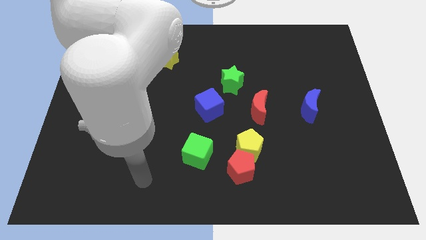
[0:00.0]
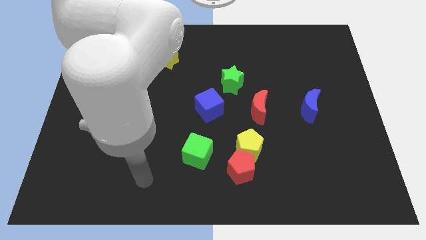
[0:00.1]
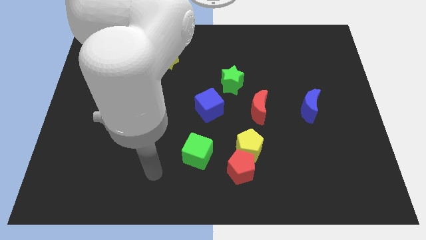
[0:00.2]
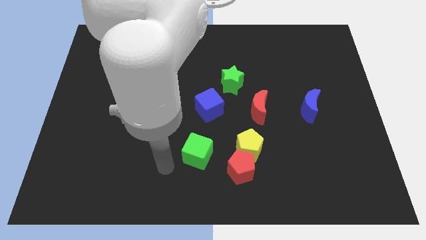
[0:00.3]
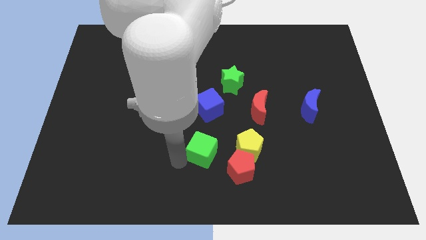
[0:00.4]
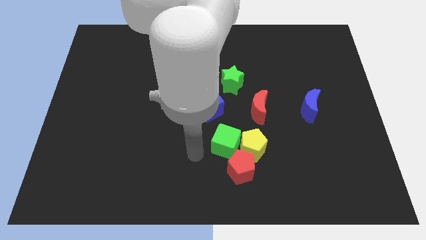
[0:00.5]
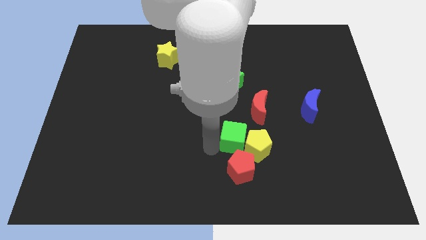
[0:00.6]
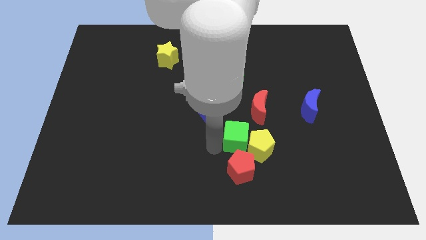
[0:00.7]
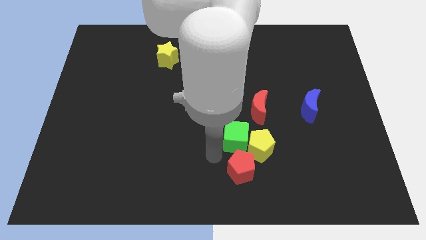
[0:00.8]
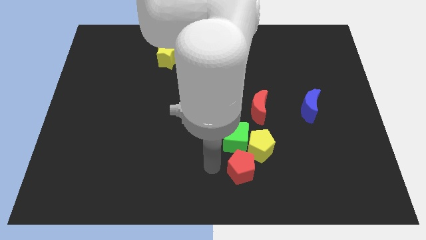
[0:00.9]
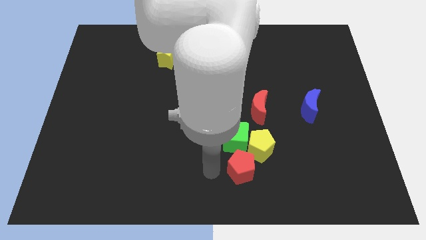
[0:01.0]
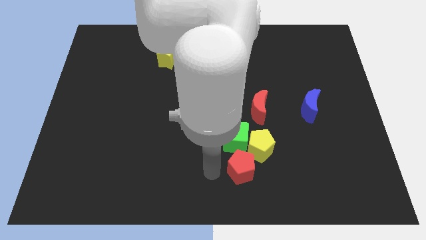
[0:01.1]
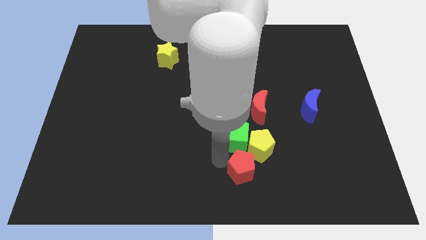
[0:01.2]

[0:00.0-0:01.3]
push the green cube into the yellow pentagon

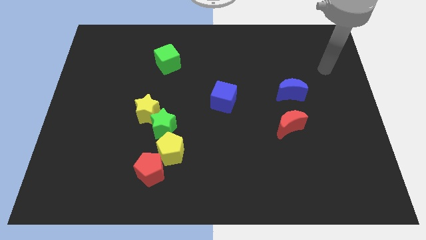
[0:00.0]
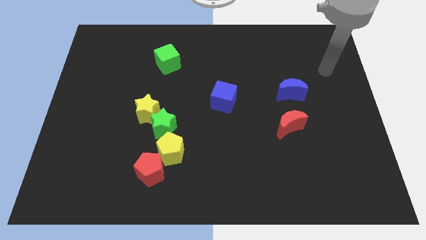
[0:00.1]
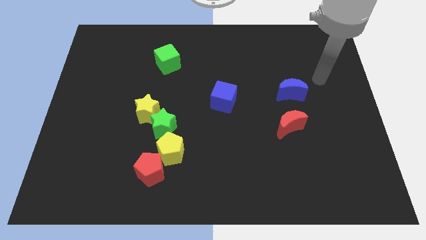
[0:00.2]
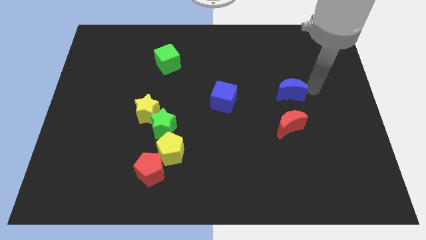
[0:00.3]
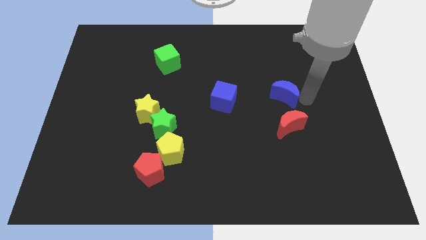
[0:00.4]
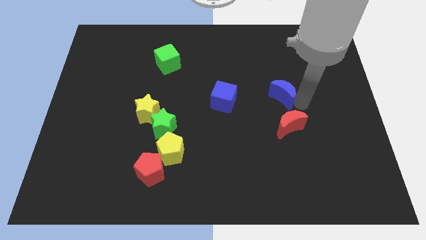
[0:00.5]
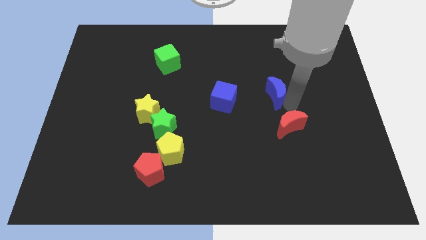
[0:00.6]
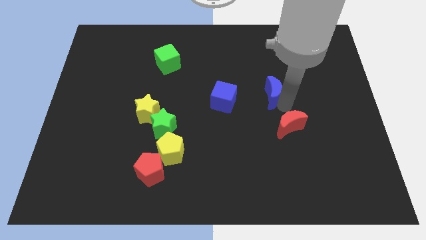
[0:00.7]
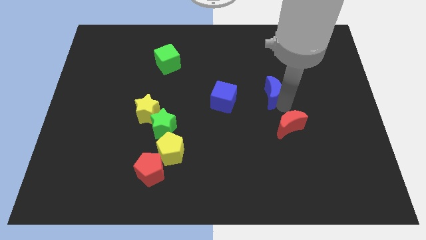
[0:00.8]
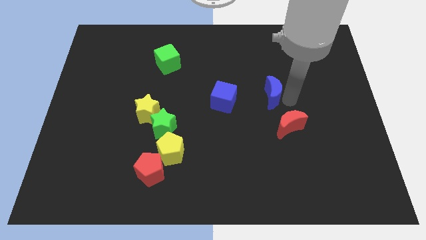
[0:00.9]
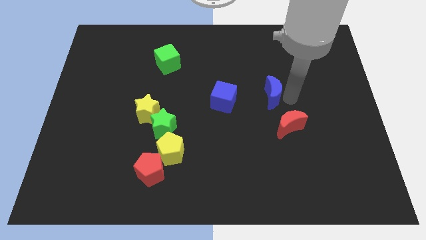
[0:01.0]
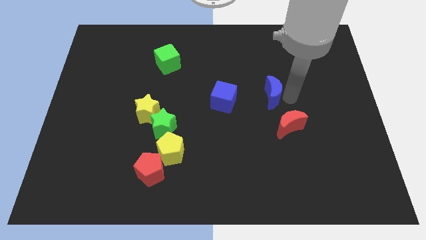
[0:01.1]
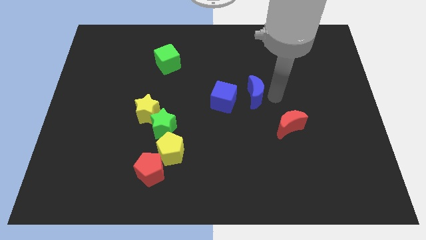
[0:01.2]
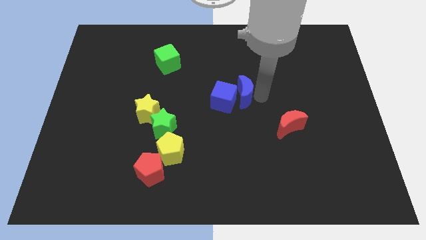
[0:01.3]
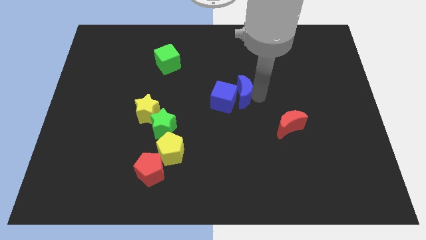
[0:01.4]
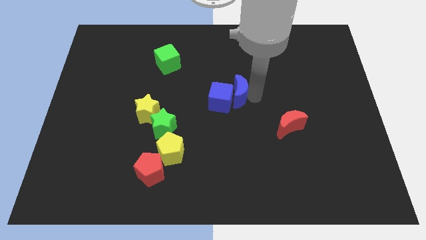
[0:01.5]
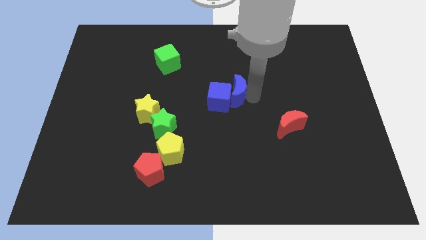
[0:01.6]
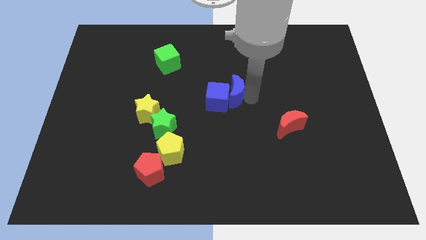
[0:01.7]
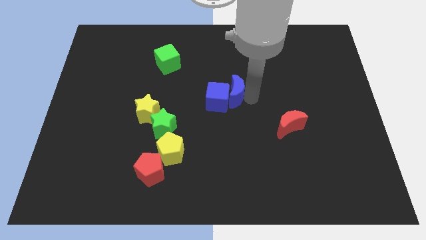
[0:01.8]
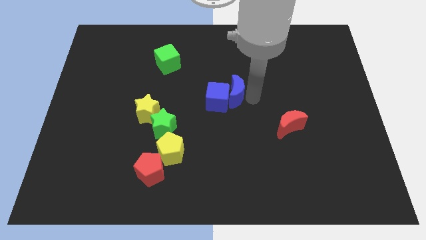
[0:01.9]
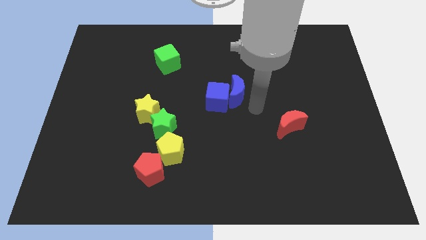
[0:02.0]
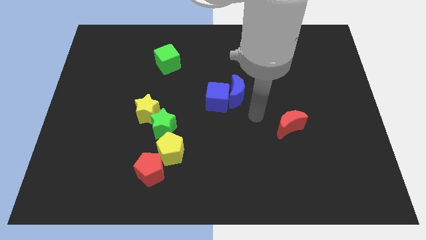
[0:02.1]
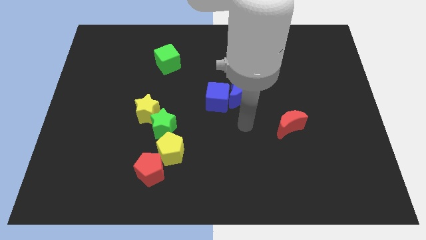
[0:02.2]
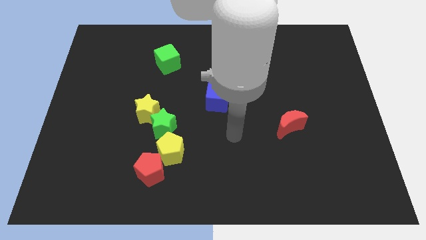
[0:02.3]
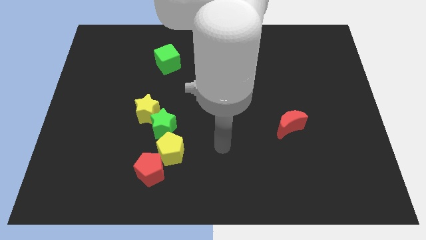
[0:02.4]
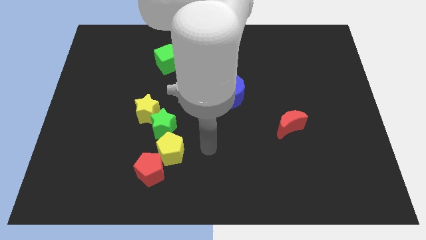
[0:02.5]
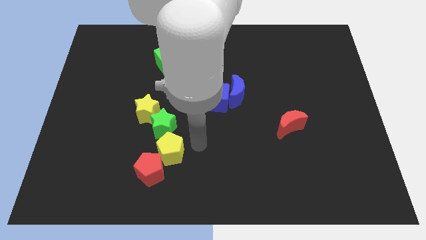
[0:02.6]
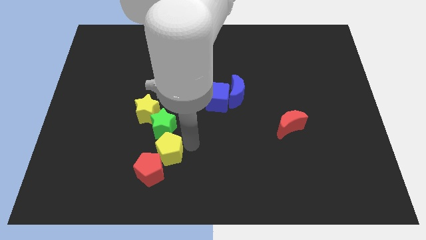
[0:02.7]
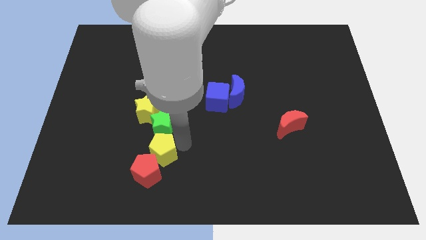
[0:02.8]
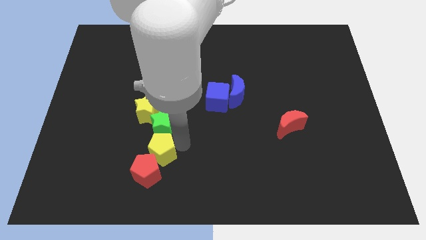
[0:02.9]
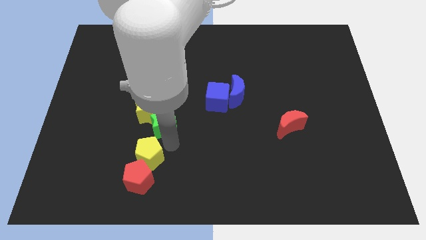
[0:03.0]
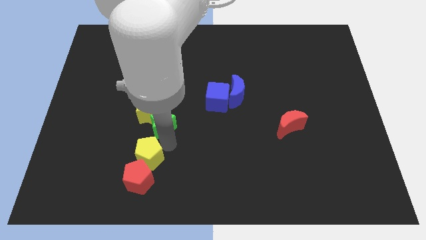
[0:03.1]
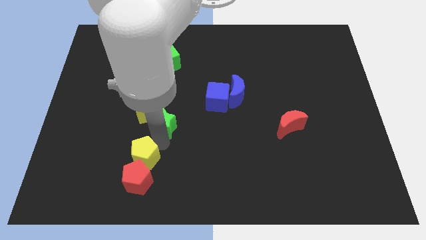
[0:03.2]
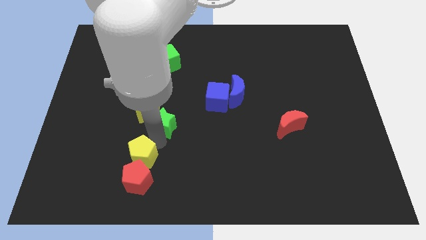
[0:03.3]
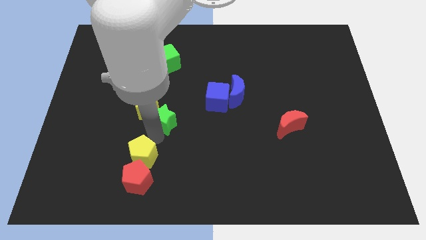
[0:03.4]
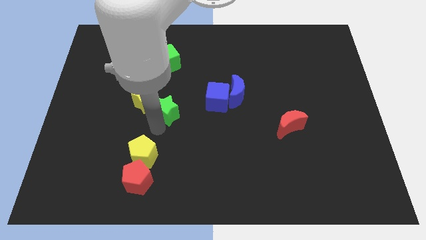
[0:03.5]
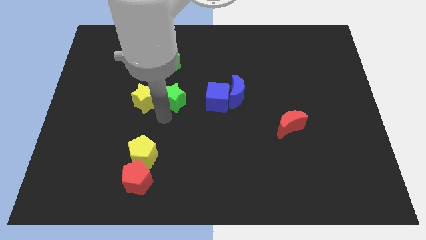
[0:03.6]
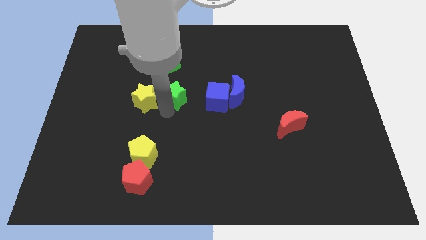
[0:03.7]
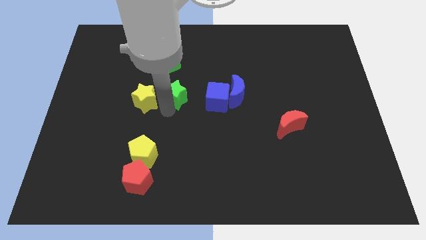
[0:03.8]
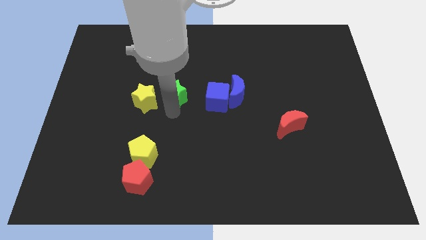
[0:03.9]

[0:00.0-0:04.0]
push the blue crescent into the blue cube

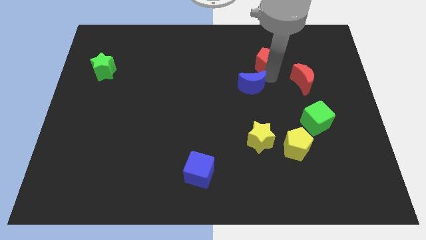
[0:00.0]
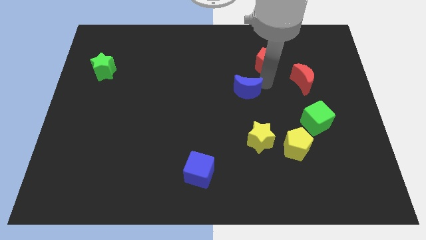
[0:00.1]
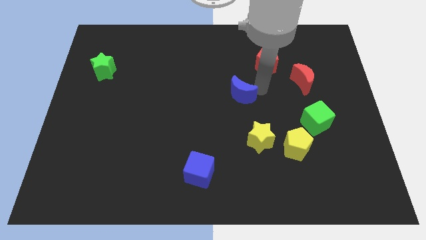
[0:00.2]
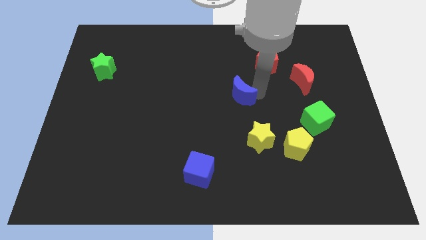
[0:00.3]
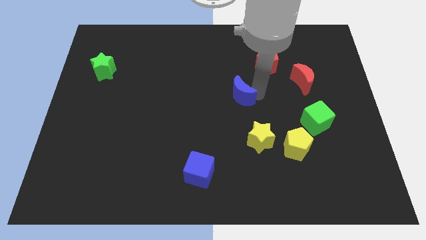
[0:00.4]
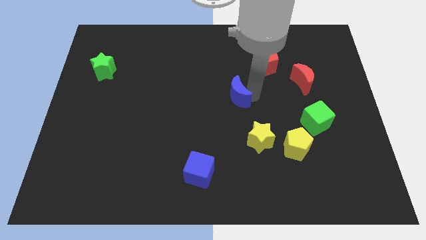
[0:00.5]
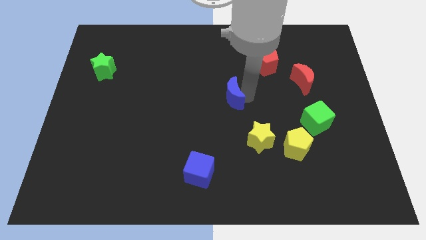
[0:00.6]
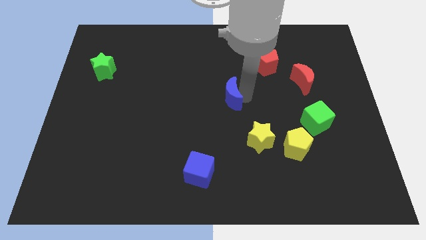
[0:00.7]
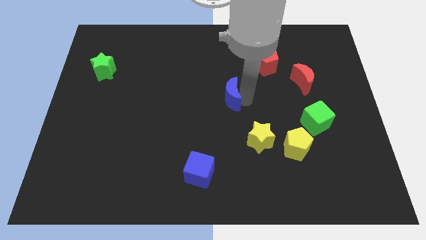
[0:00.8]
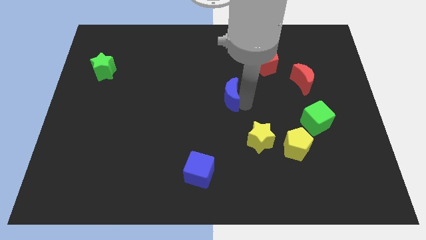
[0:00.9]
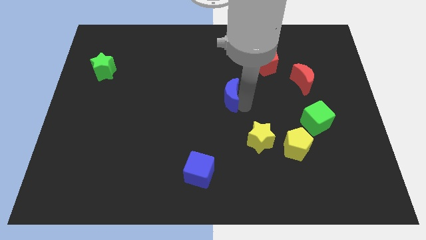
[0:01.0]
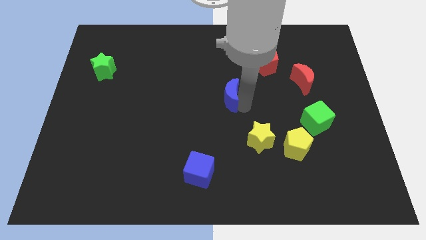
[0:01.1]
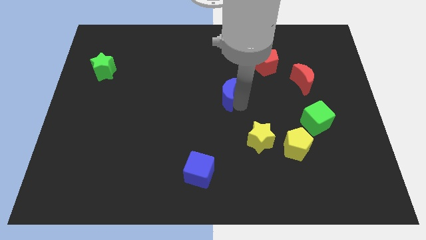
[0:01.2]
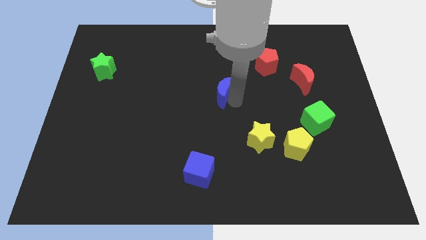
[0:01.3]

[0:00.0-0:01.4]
push the blue crescent to the center of the board

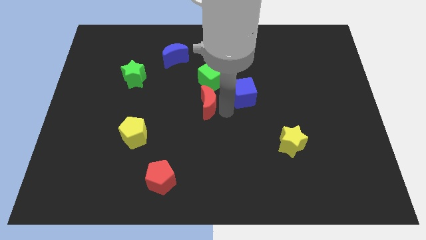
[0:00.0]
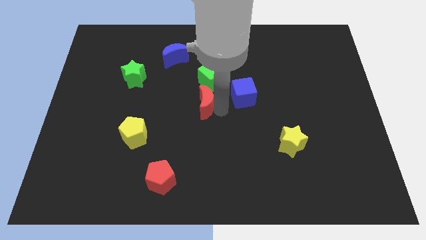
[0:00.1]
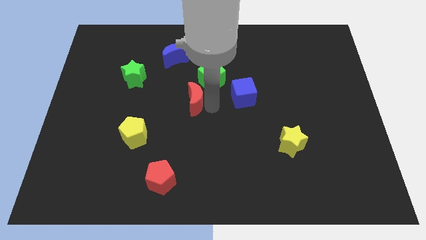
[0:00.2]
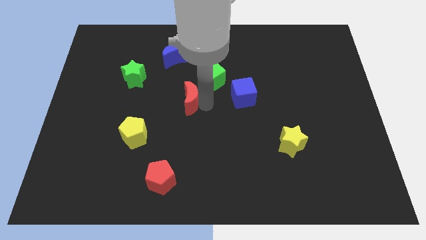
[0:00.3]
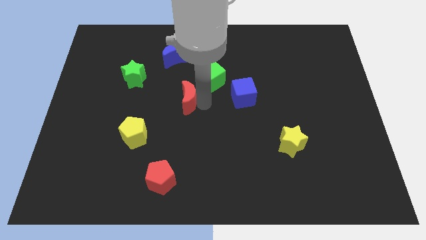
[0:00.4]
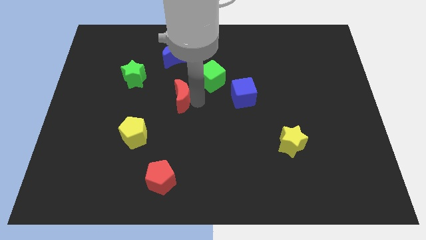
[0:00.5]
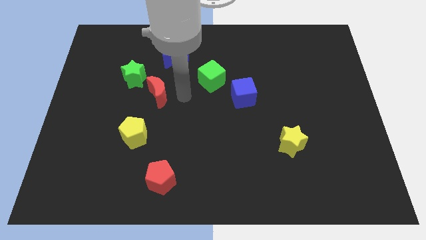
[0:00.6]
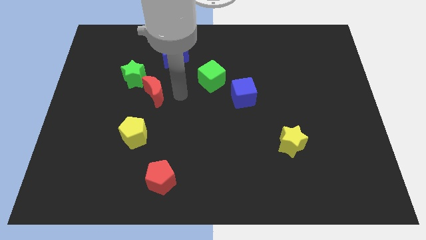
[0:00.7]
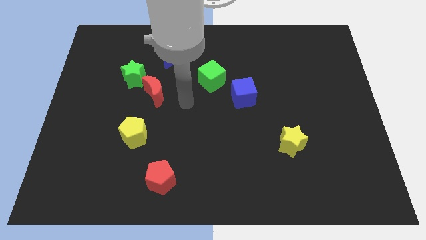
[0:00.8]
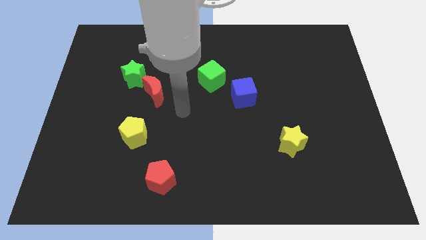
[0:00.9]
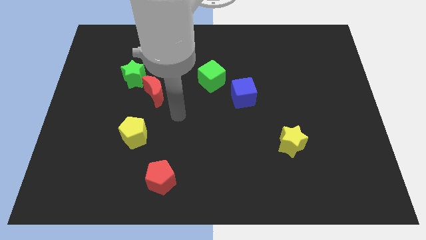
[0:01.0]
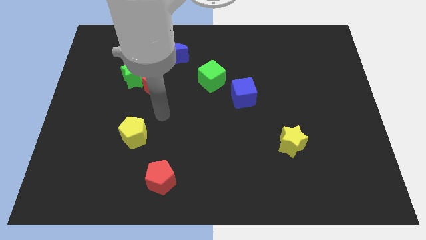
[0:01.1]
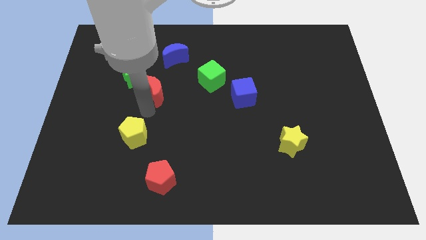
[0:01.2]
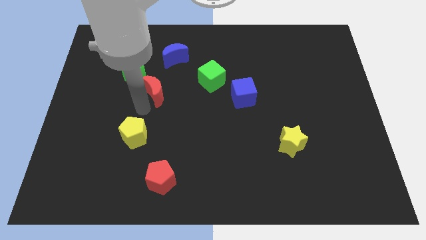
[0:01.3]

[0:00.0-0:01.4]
move the red crescent closer to the green star

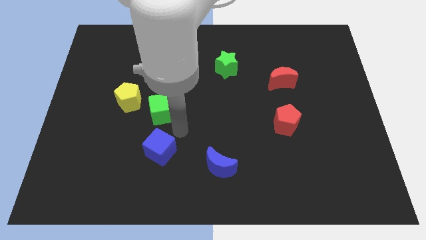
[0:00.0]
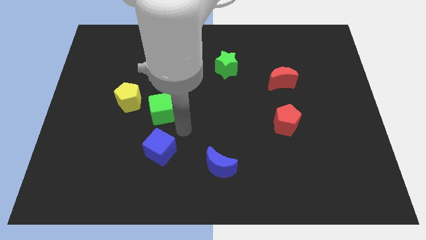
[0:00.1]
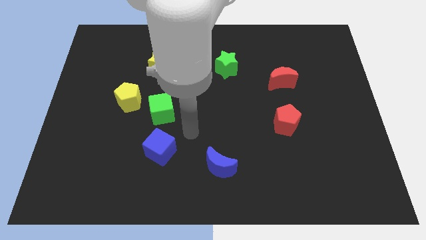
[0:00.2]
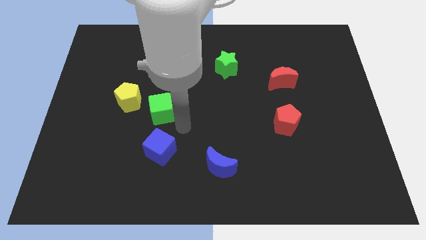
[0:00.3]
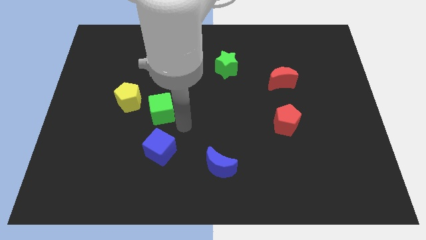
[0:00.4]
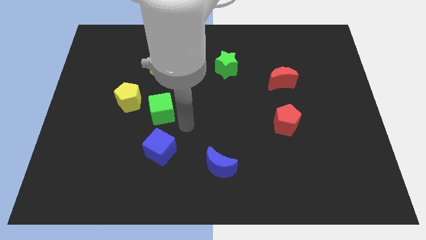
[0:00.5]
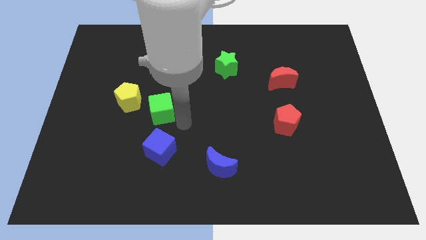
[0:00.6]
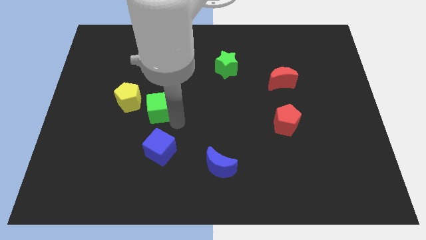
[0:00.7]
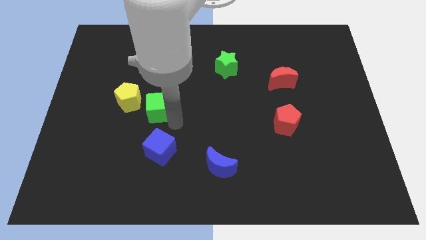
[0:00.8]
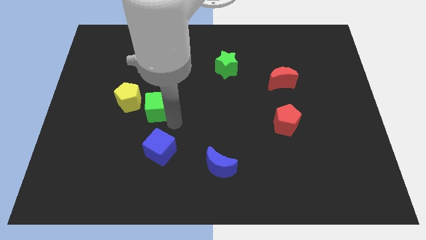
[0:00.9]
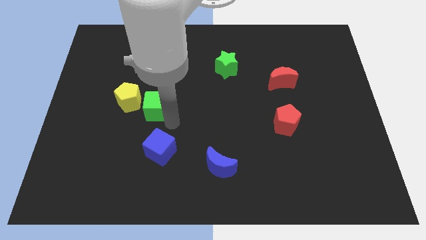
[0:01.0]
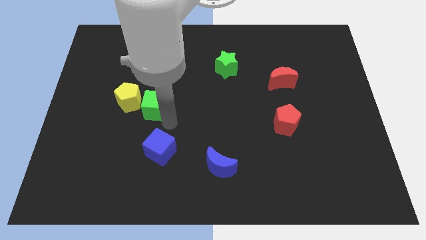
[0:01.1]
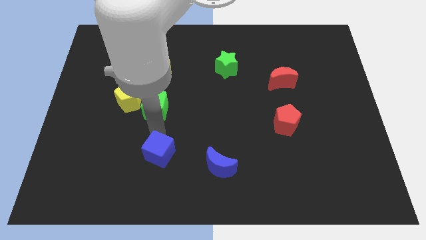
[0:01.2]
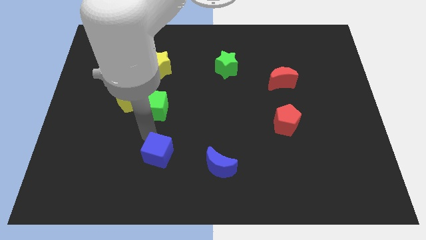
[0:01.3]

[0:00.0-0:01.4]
move green cube right beside the yellow pentagon
